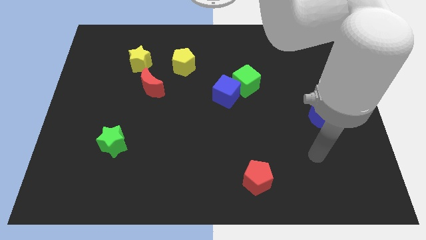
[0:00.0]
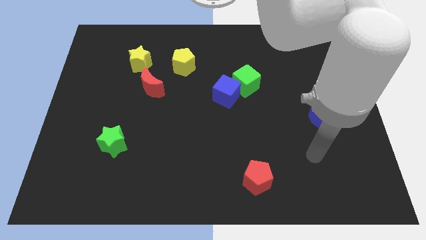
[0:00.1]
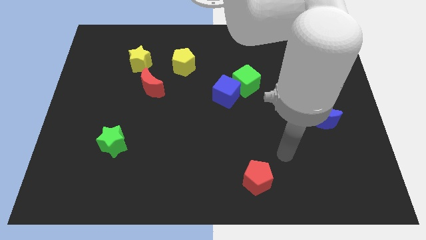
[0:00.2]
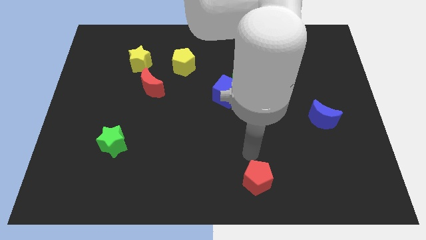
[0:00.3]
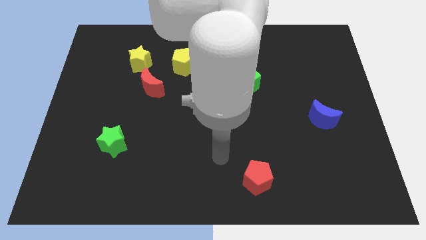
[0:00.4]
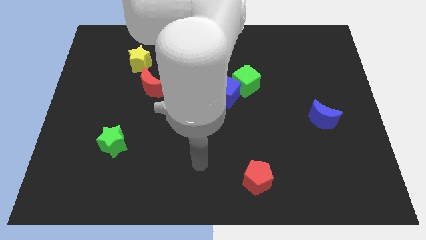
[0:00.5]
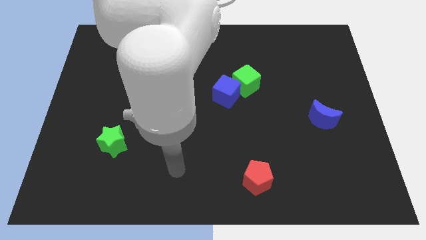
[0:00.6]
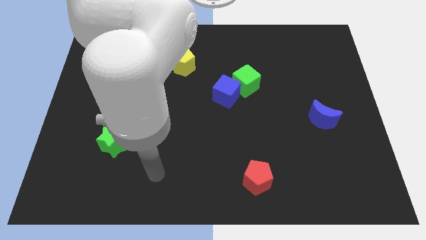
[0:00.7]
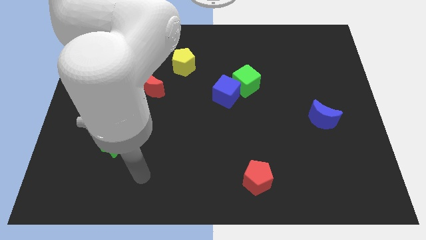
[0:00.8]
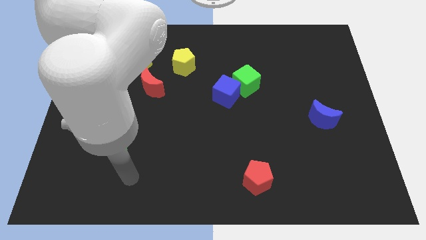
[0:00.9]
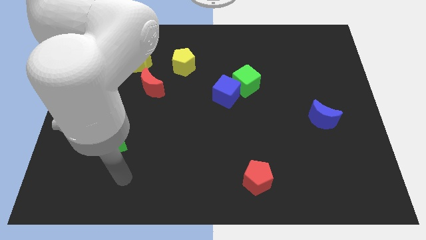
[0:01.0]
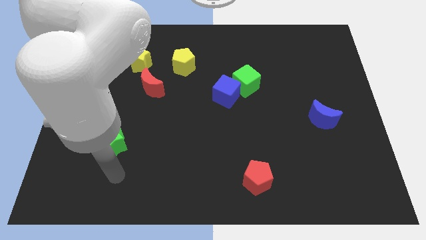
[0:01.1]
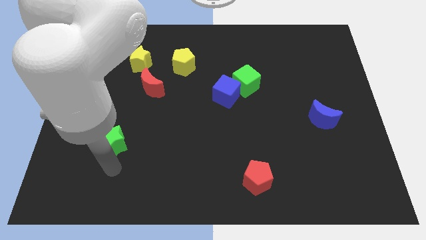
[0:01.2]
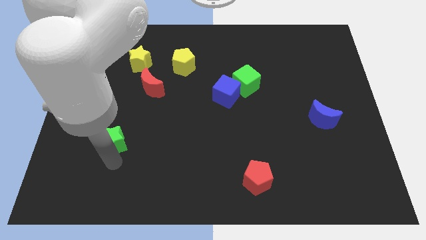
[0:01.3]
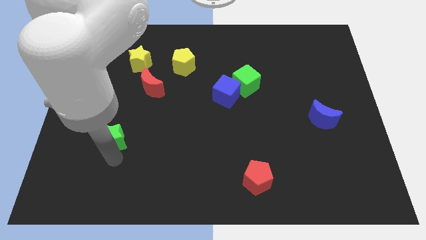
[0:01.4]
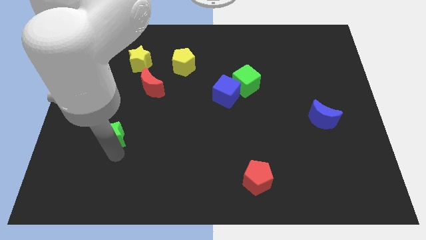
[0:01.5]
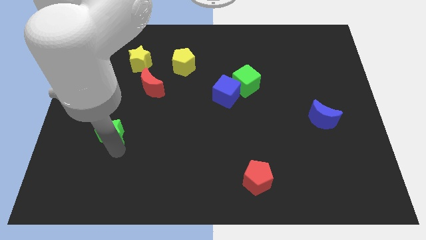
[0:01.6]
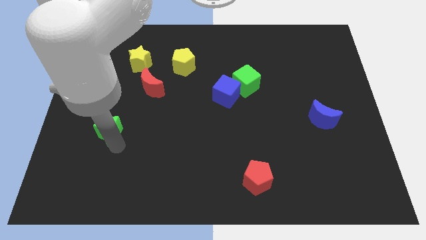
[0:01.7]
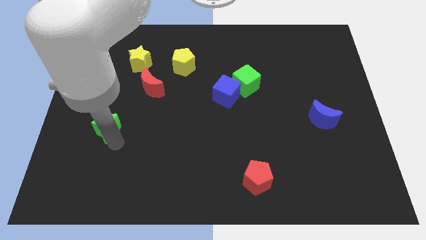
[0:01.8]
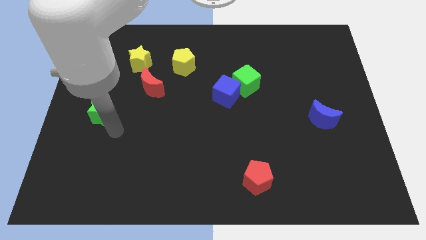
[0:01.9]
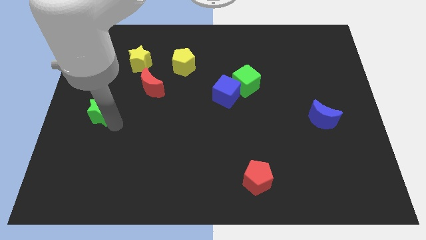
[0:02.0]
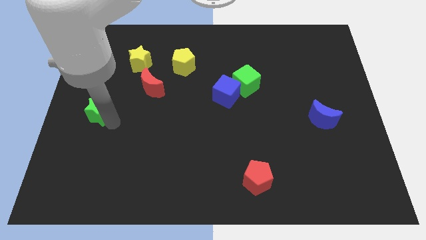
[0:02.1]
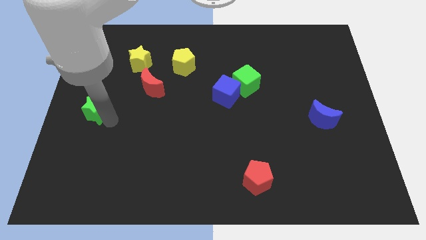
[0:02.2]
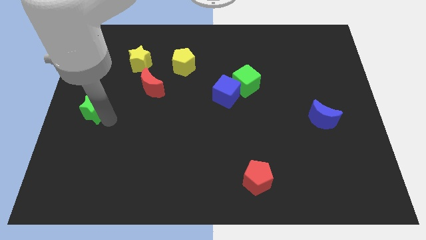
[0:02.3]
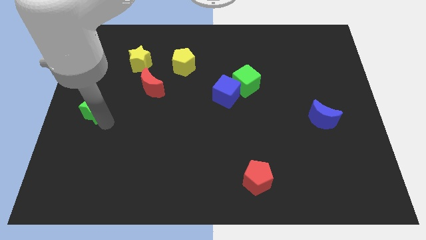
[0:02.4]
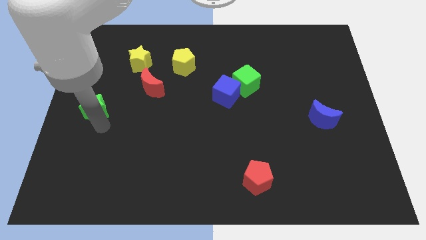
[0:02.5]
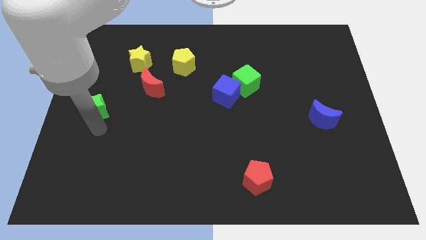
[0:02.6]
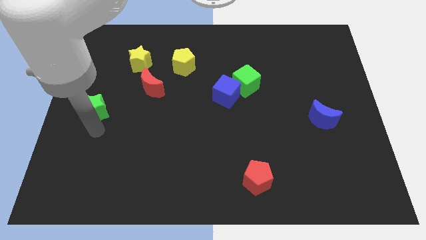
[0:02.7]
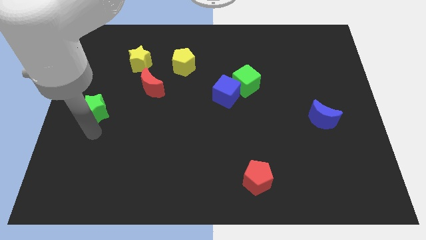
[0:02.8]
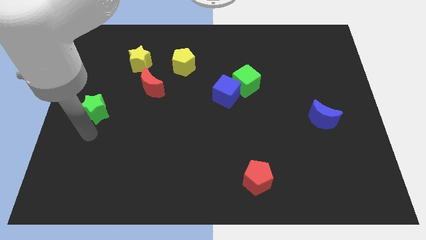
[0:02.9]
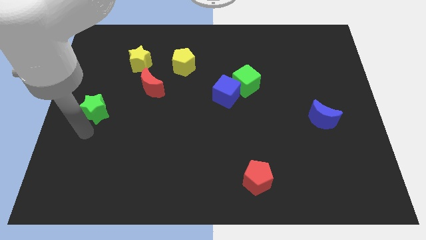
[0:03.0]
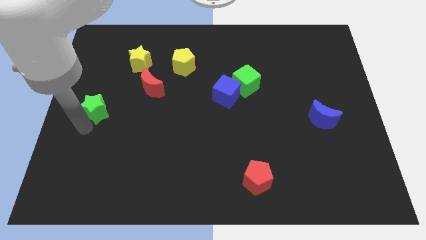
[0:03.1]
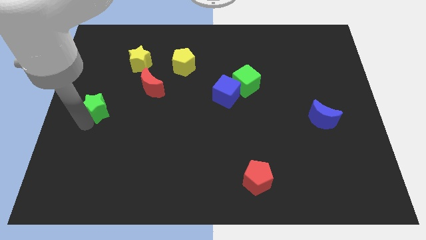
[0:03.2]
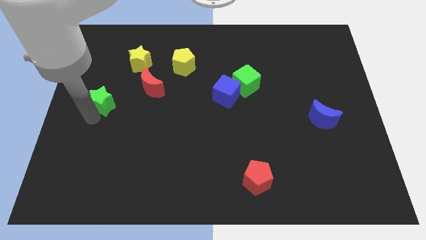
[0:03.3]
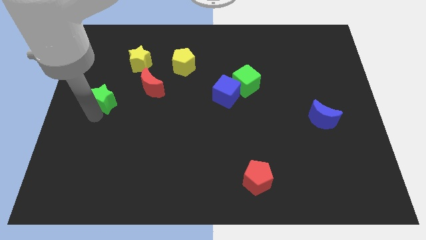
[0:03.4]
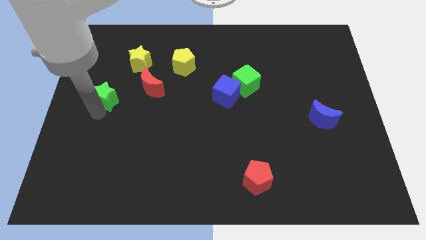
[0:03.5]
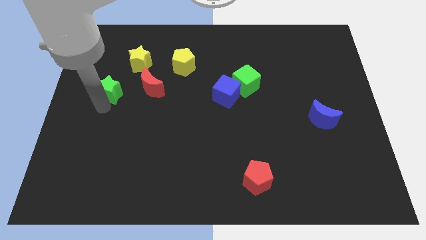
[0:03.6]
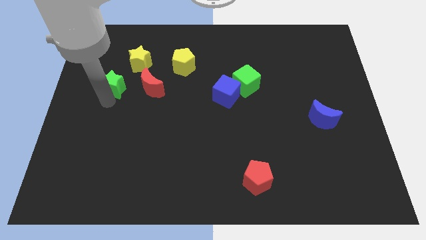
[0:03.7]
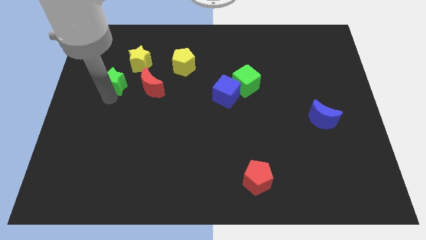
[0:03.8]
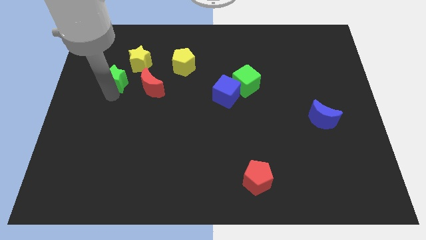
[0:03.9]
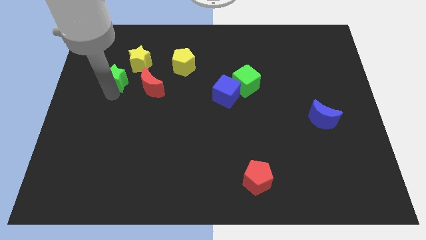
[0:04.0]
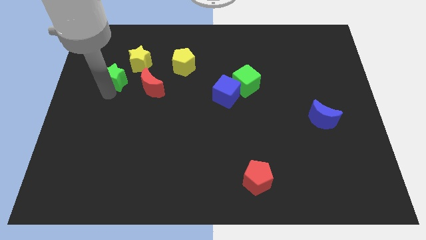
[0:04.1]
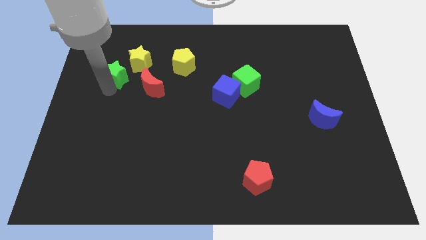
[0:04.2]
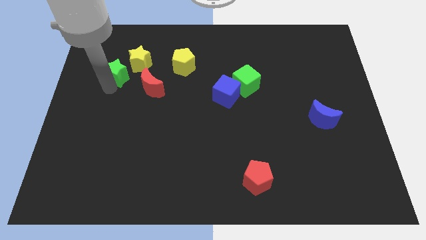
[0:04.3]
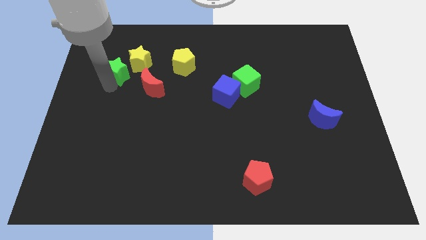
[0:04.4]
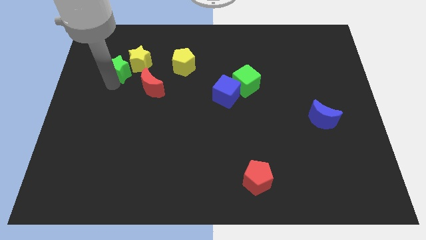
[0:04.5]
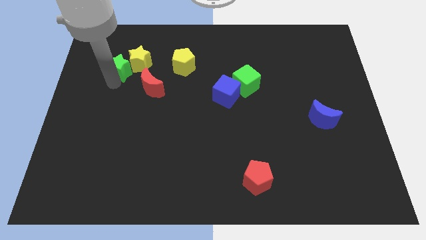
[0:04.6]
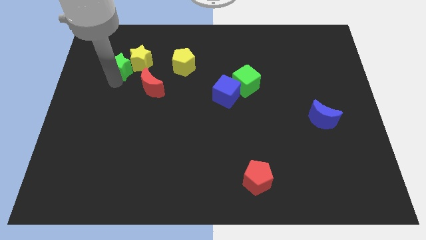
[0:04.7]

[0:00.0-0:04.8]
move the green star to the yellow star

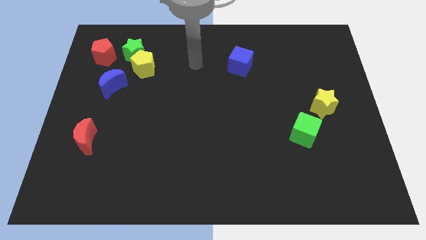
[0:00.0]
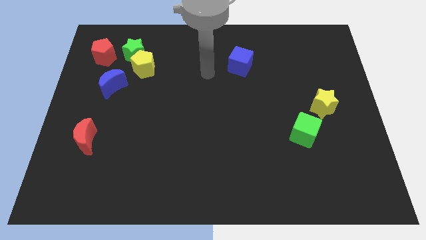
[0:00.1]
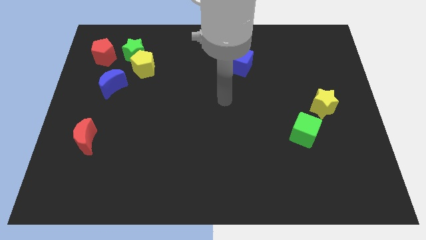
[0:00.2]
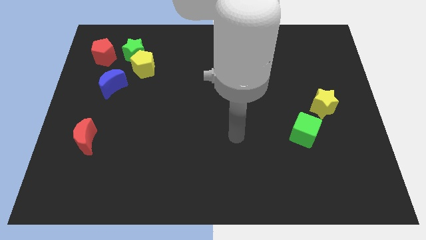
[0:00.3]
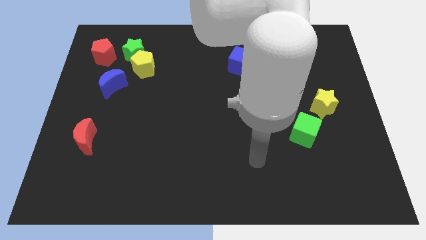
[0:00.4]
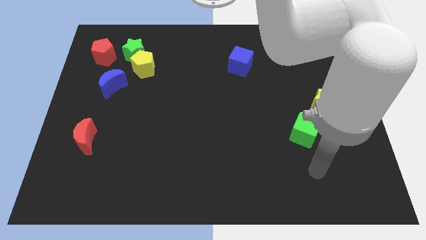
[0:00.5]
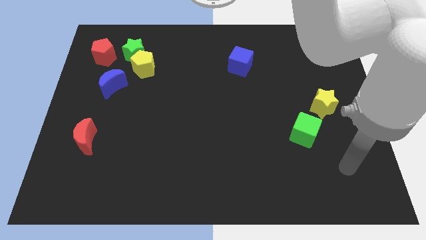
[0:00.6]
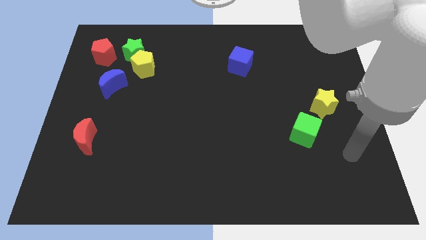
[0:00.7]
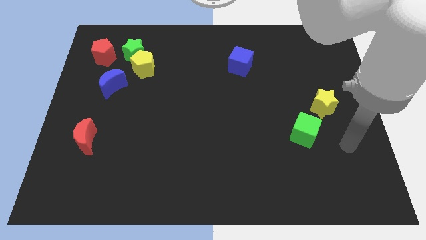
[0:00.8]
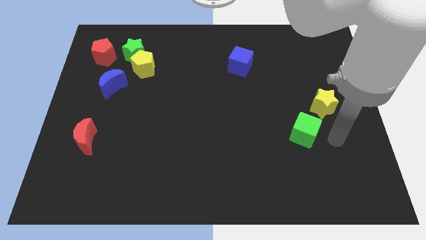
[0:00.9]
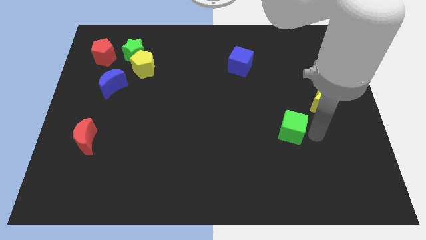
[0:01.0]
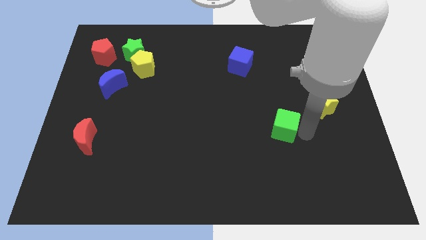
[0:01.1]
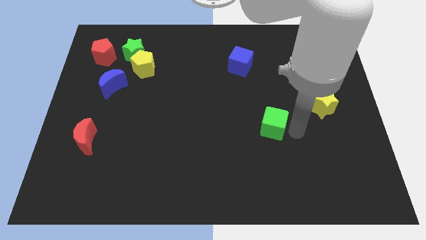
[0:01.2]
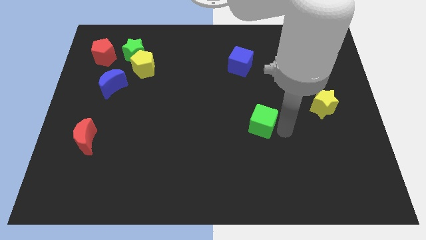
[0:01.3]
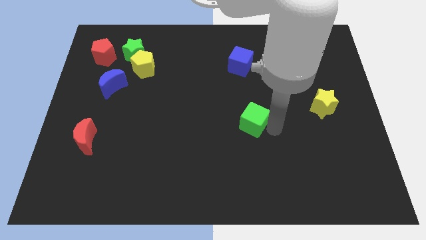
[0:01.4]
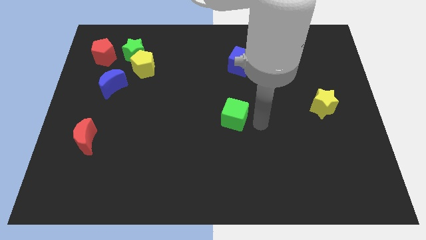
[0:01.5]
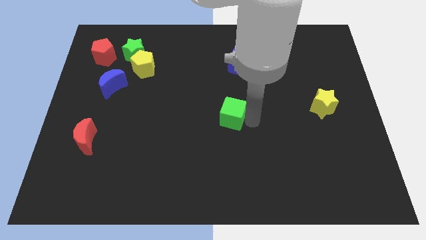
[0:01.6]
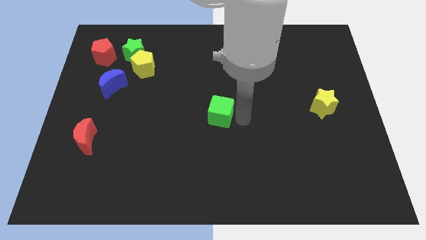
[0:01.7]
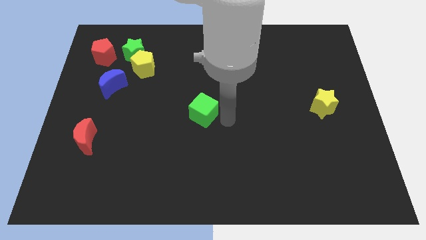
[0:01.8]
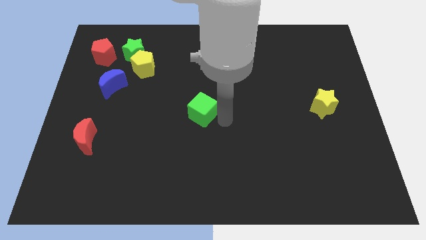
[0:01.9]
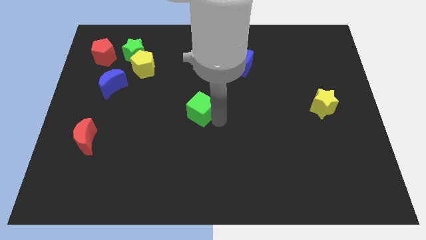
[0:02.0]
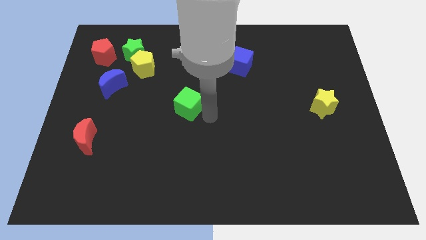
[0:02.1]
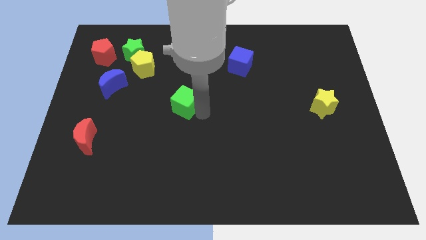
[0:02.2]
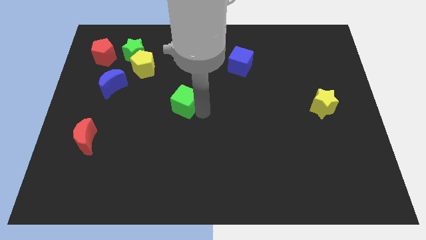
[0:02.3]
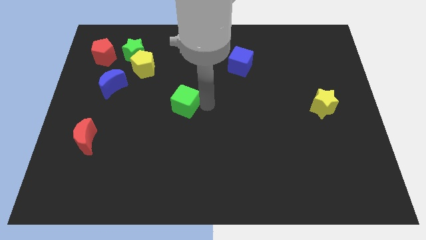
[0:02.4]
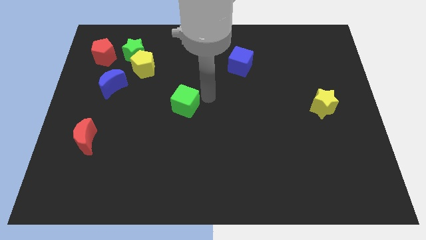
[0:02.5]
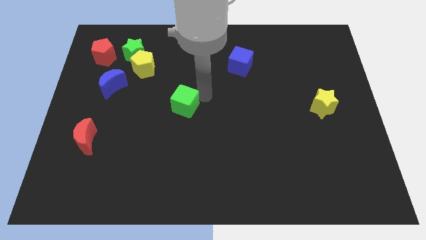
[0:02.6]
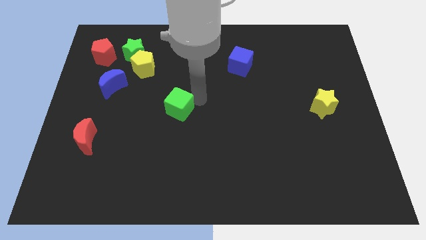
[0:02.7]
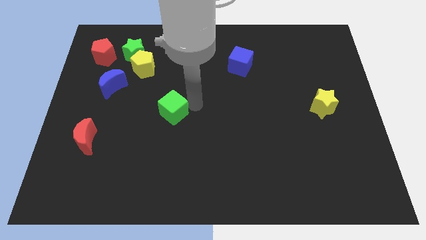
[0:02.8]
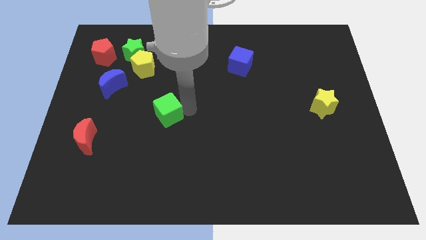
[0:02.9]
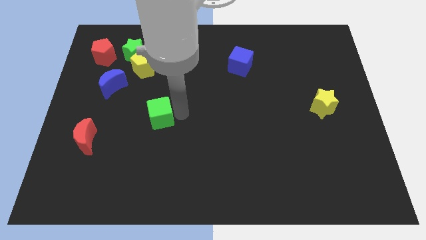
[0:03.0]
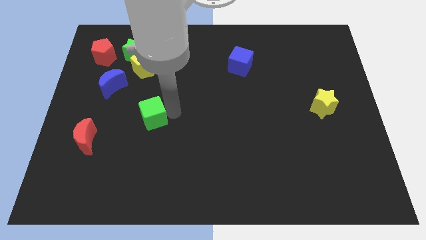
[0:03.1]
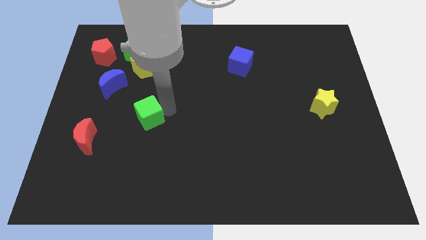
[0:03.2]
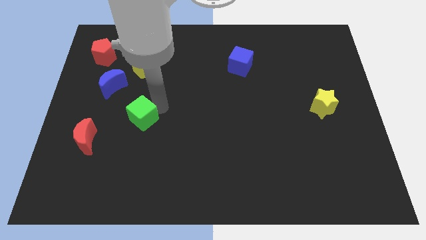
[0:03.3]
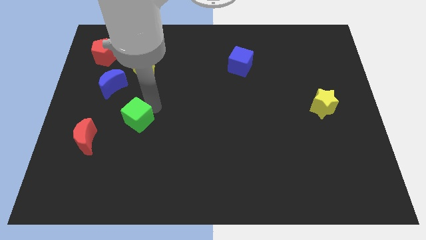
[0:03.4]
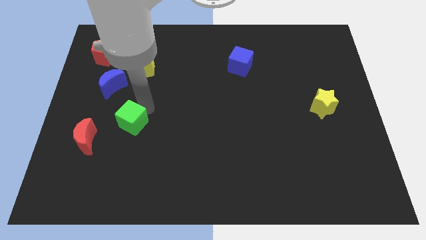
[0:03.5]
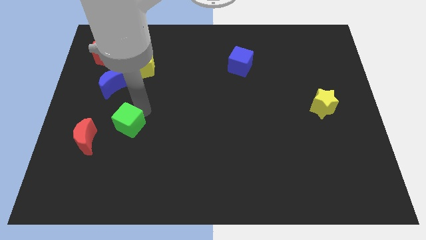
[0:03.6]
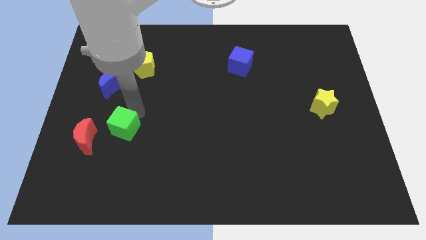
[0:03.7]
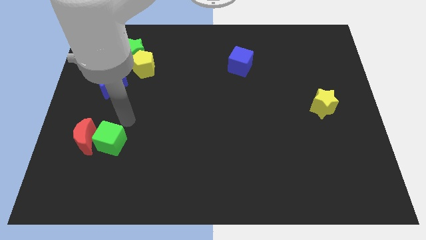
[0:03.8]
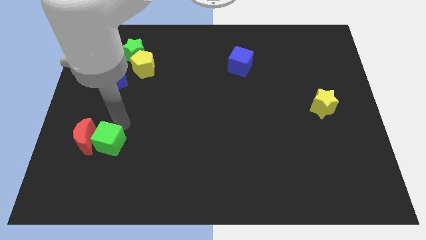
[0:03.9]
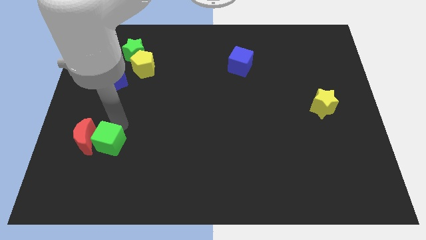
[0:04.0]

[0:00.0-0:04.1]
slide the green cube next to the red moon
